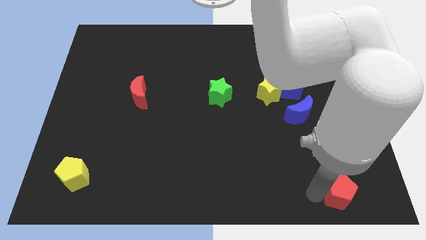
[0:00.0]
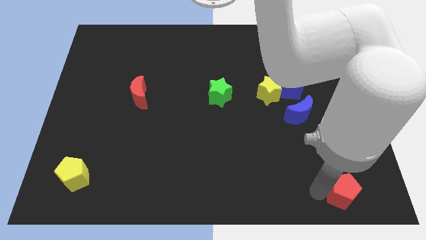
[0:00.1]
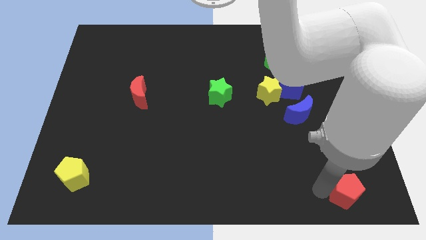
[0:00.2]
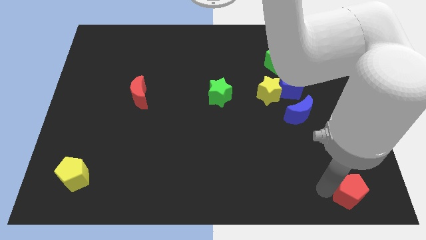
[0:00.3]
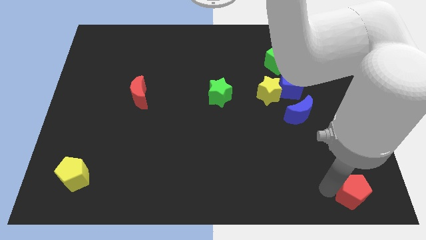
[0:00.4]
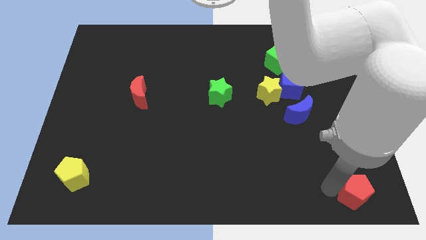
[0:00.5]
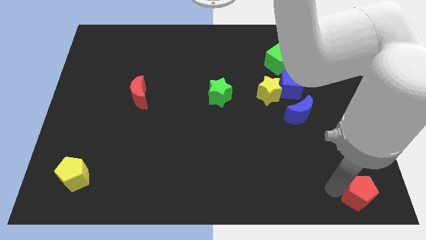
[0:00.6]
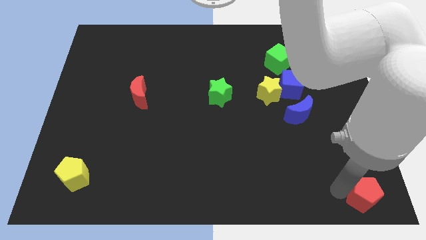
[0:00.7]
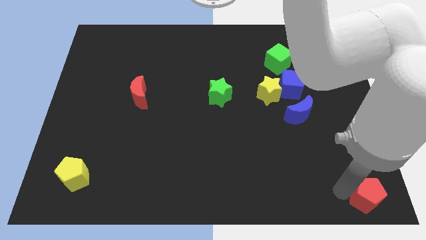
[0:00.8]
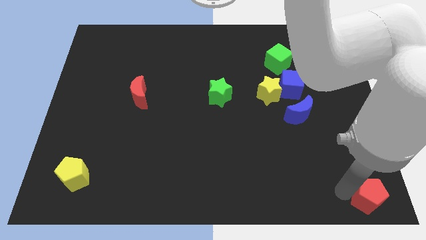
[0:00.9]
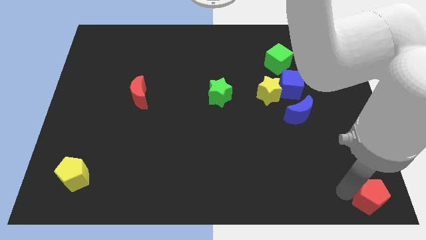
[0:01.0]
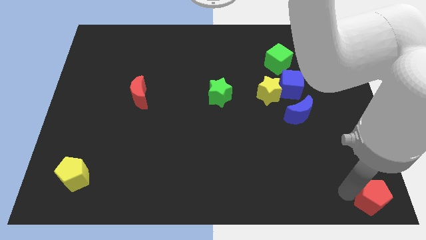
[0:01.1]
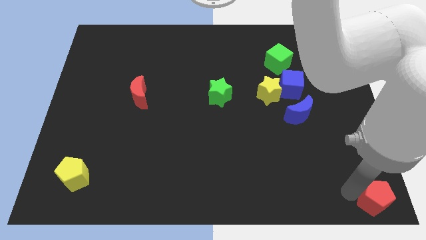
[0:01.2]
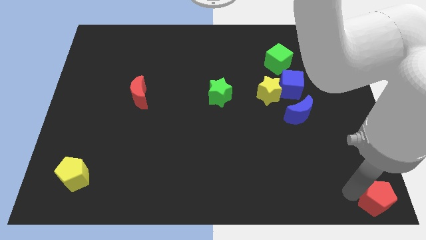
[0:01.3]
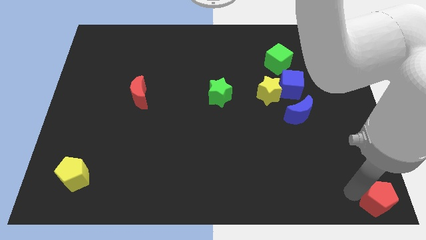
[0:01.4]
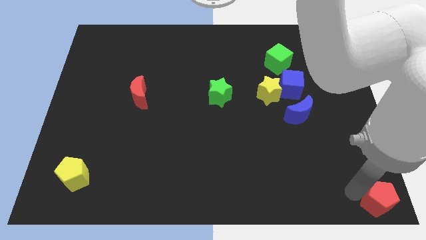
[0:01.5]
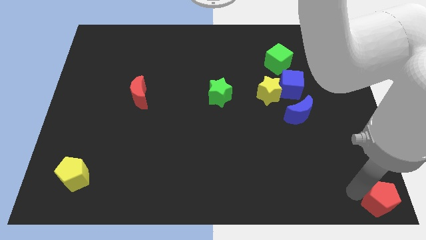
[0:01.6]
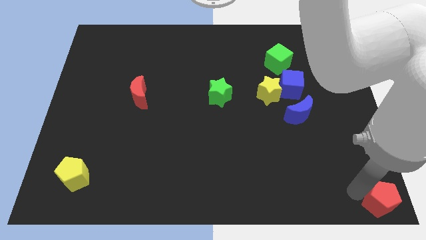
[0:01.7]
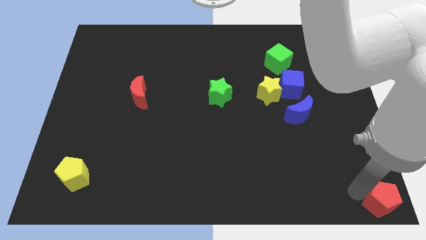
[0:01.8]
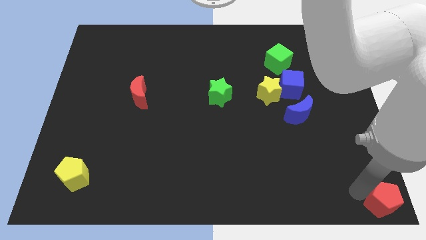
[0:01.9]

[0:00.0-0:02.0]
push the red pentagon bottom right to the board

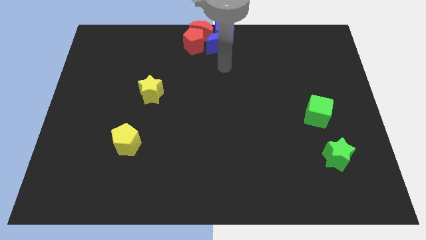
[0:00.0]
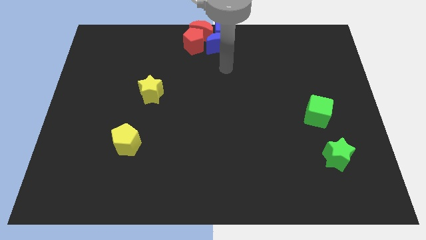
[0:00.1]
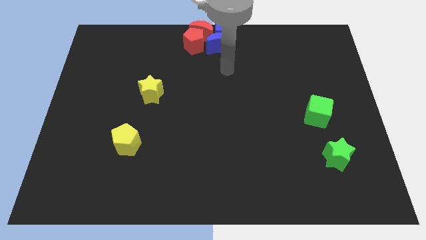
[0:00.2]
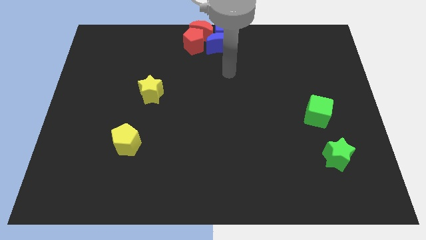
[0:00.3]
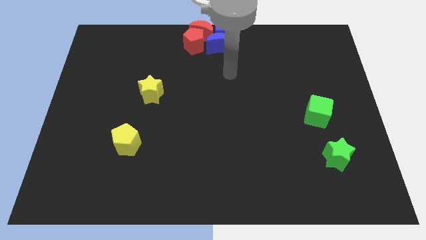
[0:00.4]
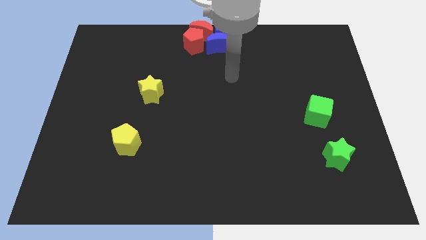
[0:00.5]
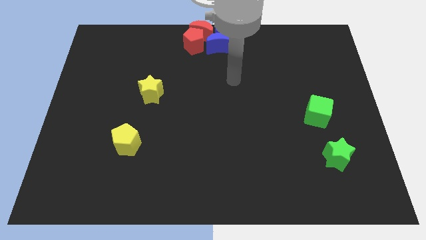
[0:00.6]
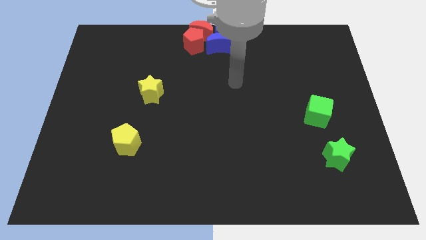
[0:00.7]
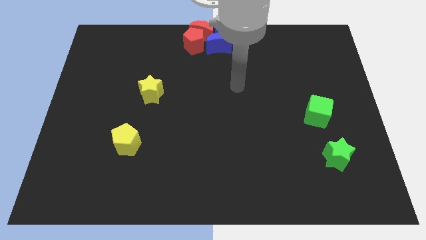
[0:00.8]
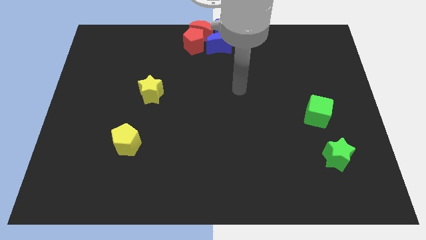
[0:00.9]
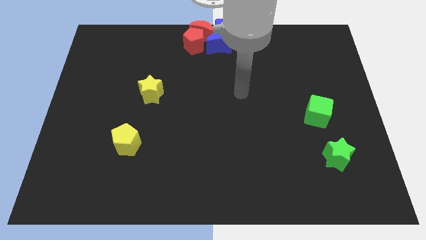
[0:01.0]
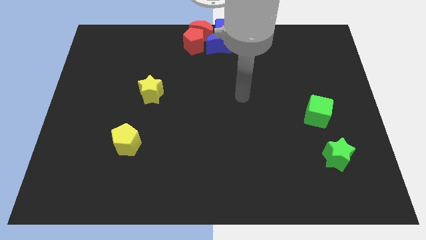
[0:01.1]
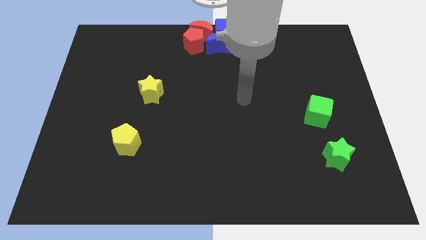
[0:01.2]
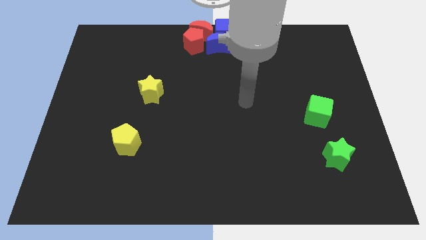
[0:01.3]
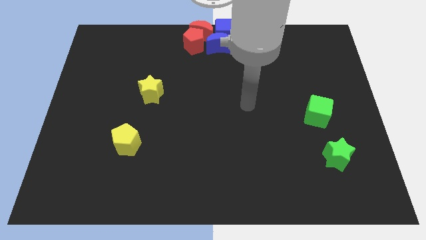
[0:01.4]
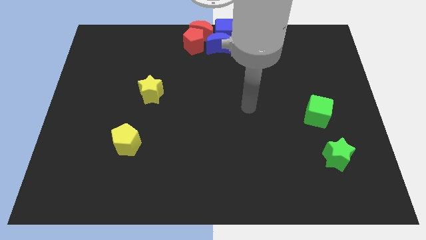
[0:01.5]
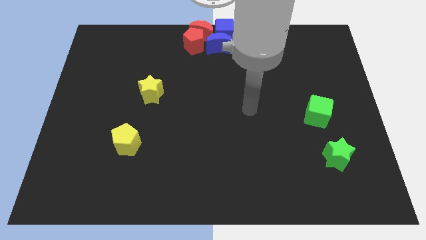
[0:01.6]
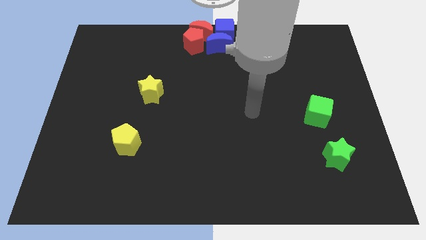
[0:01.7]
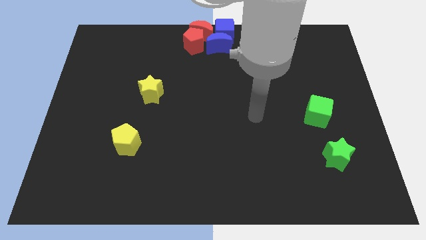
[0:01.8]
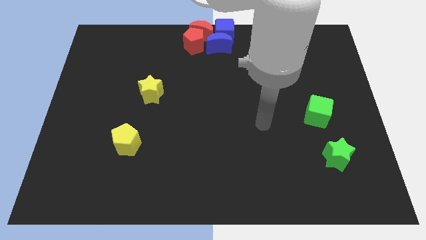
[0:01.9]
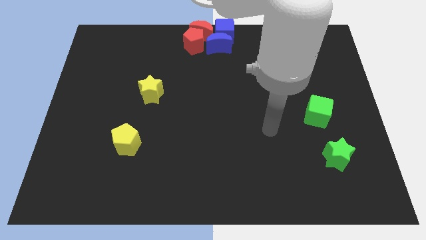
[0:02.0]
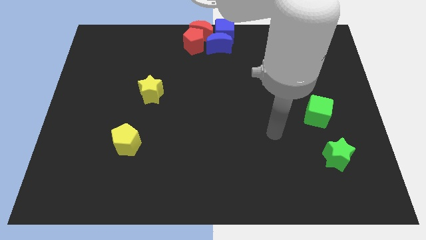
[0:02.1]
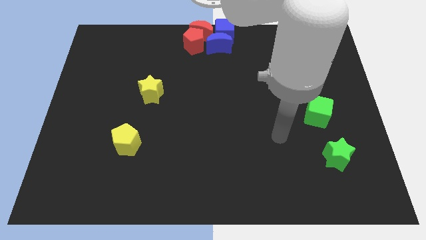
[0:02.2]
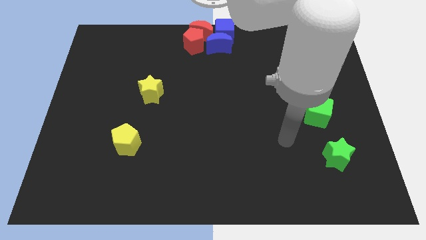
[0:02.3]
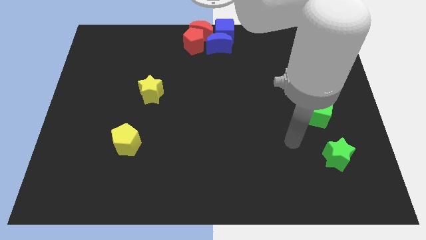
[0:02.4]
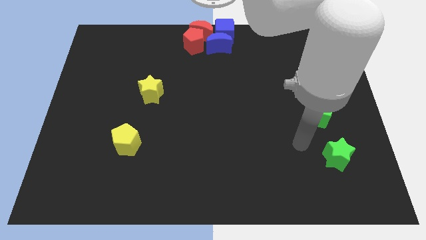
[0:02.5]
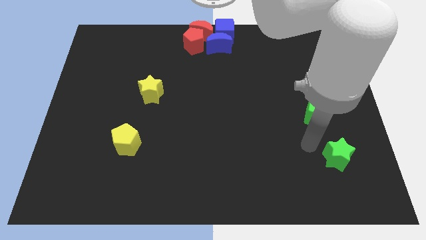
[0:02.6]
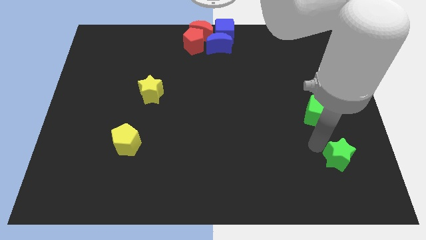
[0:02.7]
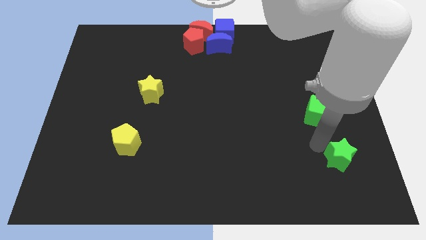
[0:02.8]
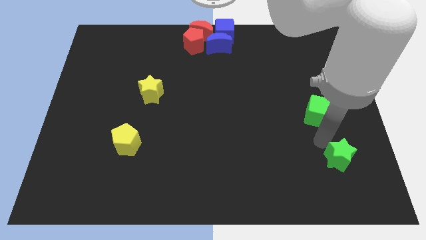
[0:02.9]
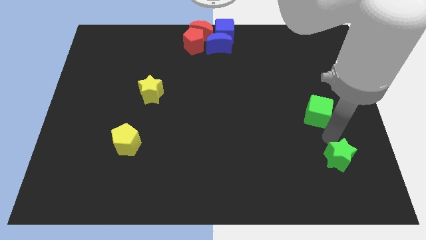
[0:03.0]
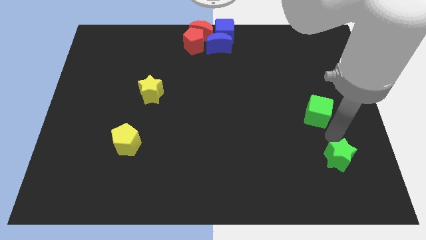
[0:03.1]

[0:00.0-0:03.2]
tap the green star

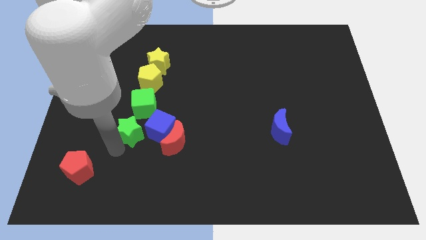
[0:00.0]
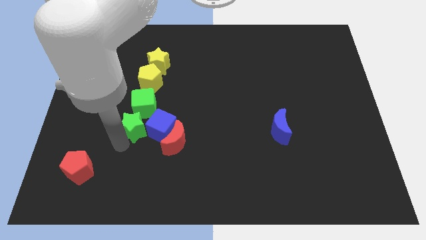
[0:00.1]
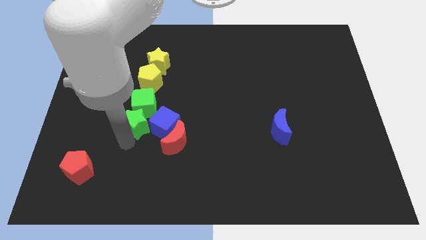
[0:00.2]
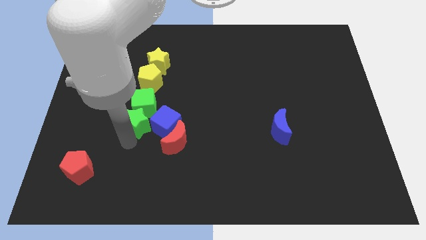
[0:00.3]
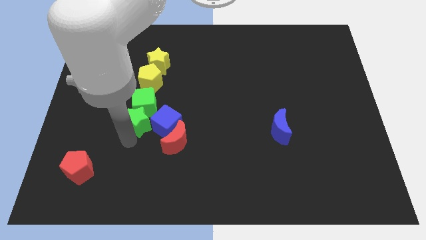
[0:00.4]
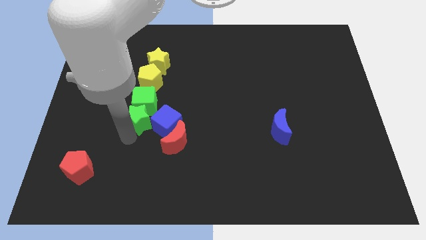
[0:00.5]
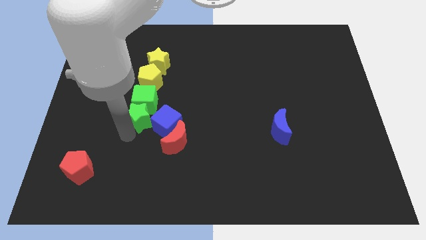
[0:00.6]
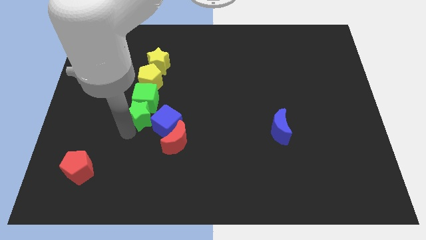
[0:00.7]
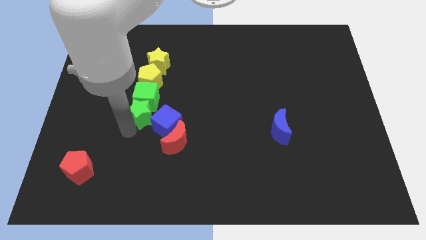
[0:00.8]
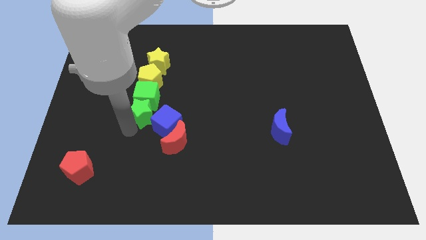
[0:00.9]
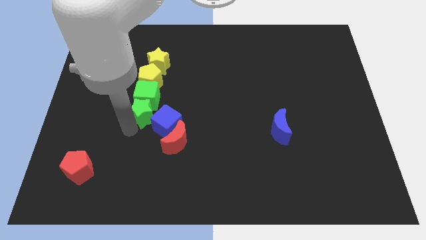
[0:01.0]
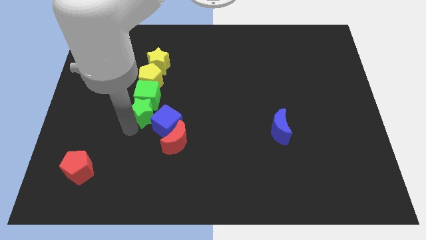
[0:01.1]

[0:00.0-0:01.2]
push the green star into the green cube

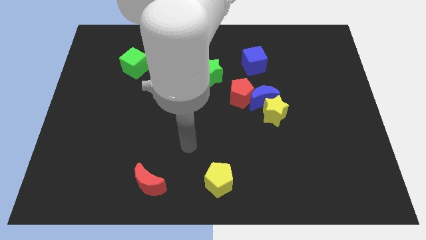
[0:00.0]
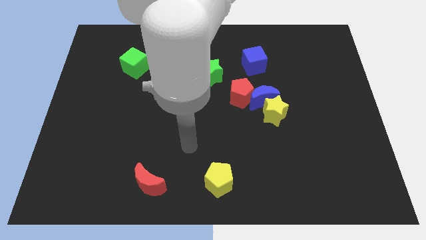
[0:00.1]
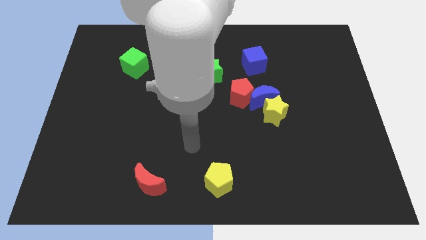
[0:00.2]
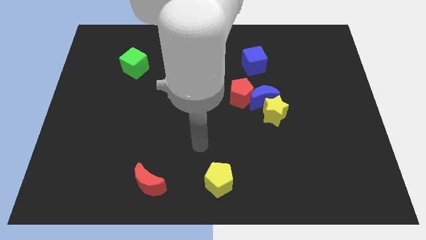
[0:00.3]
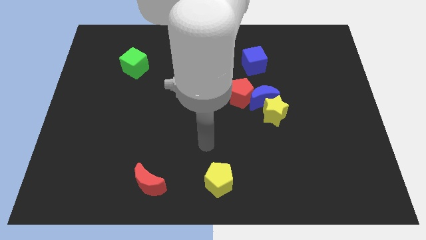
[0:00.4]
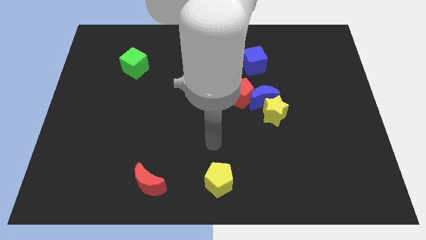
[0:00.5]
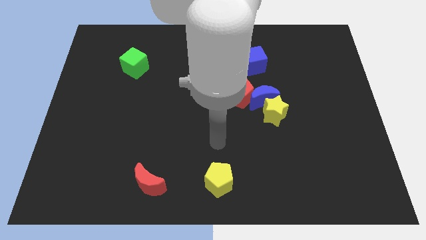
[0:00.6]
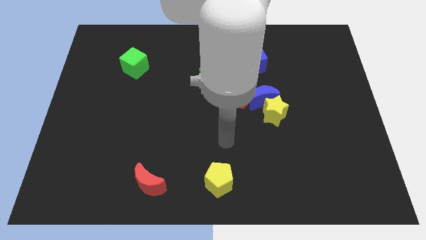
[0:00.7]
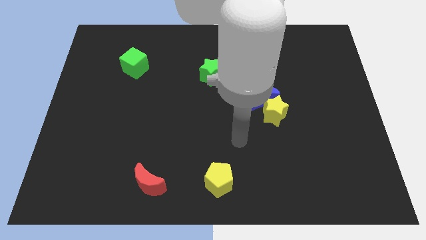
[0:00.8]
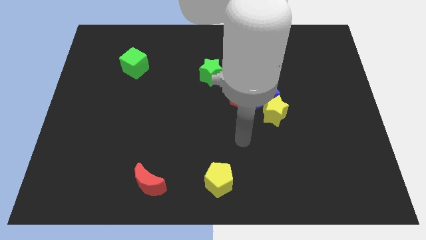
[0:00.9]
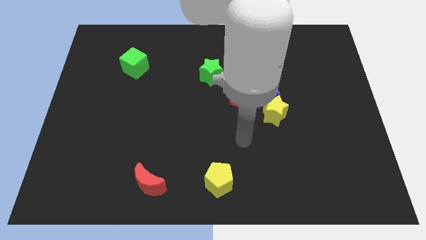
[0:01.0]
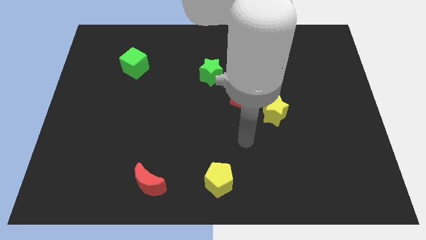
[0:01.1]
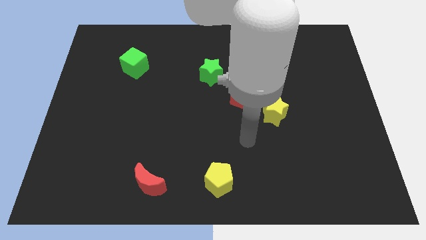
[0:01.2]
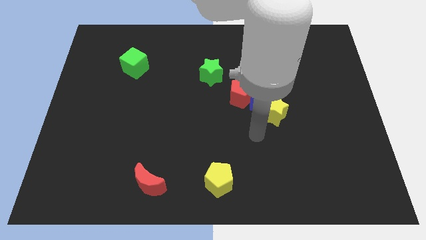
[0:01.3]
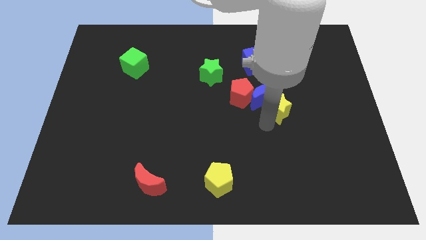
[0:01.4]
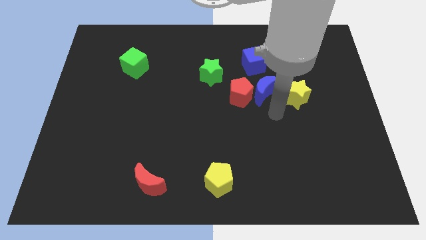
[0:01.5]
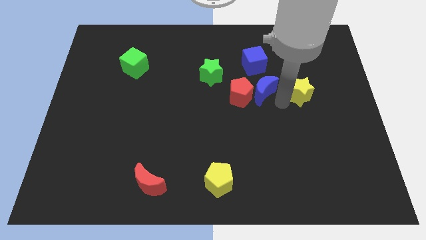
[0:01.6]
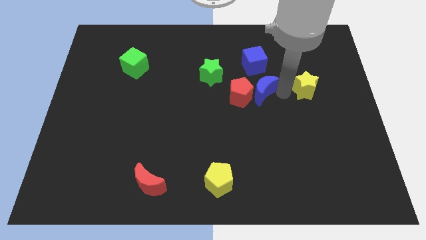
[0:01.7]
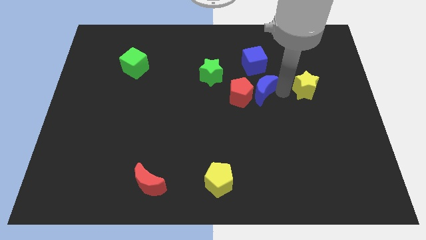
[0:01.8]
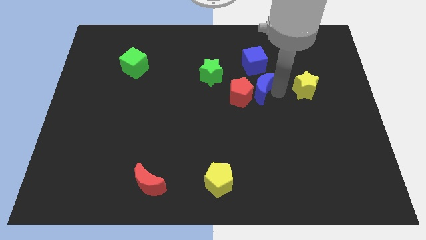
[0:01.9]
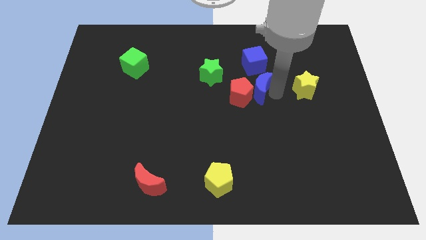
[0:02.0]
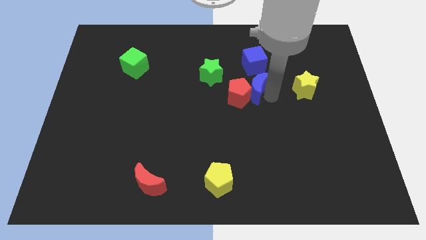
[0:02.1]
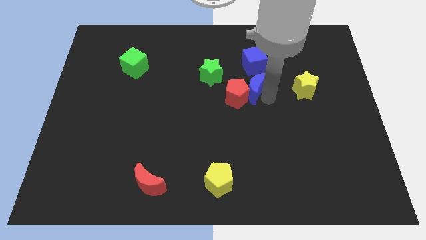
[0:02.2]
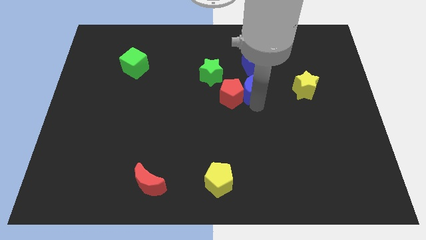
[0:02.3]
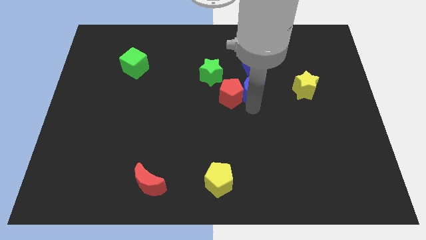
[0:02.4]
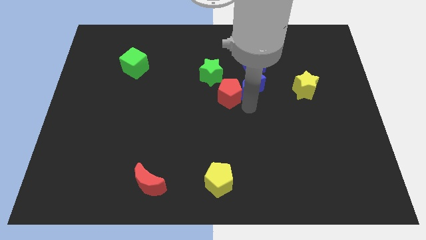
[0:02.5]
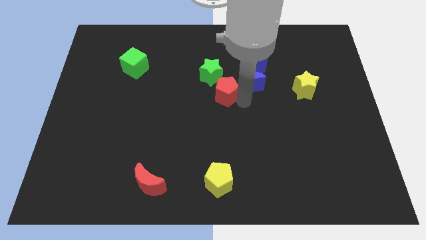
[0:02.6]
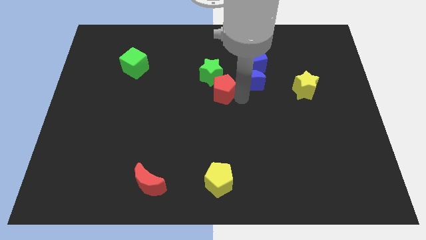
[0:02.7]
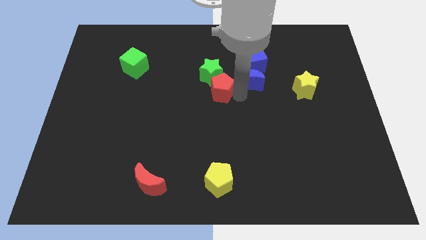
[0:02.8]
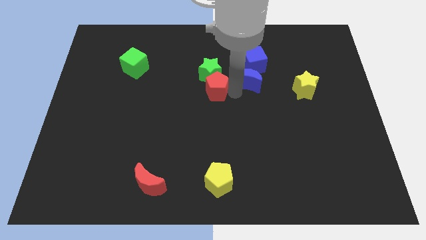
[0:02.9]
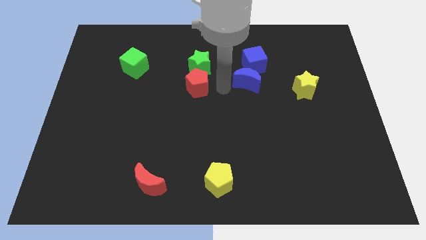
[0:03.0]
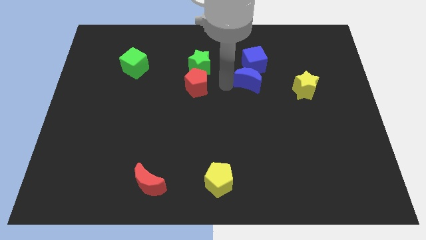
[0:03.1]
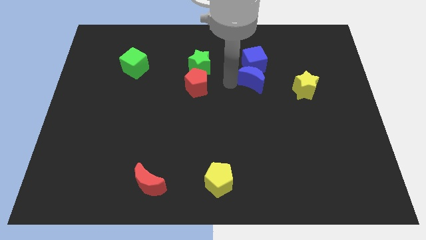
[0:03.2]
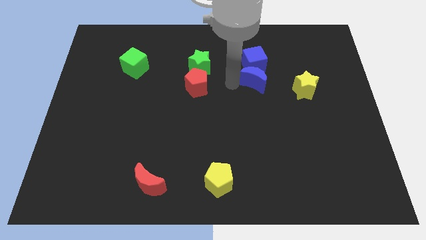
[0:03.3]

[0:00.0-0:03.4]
separate yellow star blue moon from red pentagon
